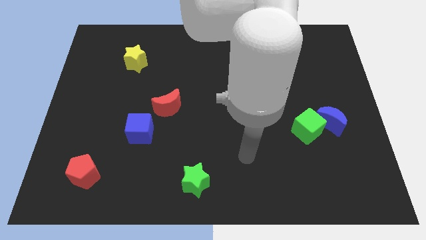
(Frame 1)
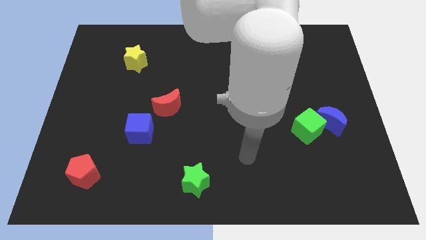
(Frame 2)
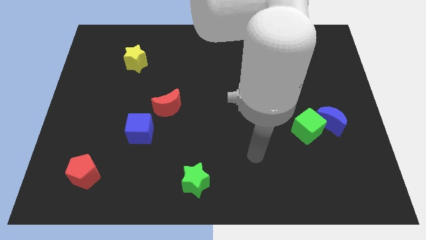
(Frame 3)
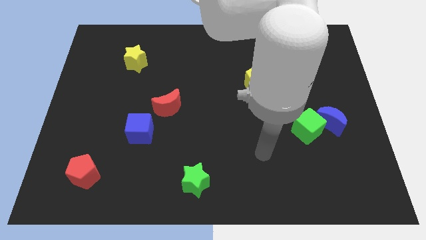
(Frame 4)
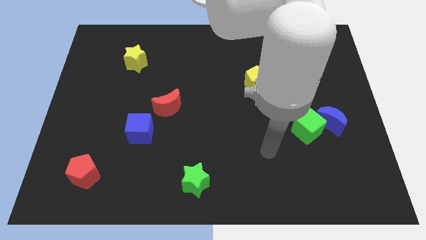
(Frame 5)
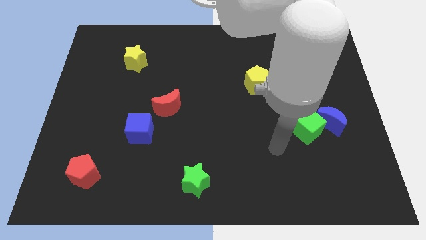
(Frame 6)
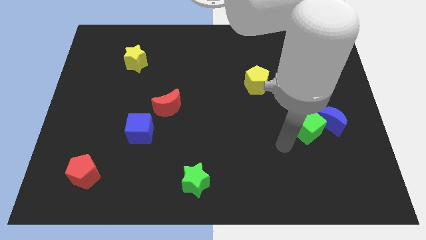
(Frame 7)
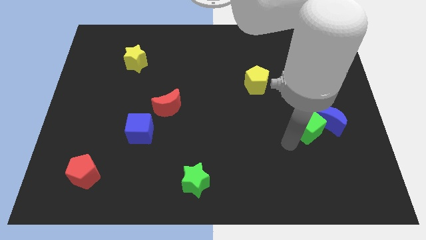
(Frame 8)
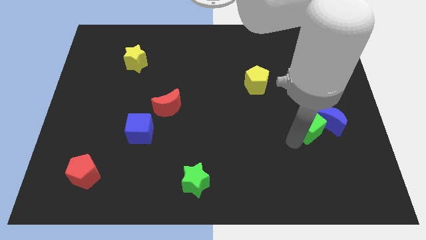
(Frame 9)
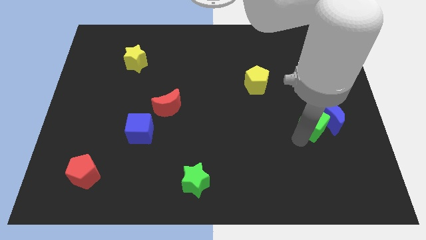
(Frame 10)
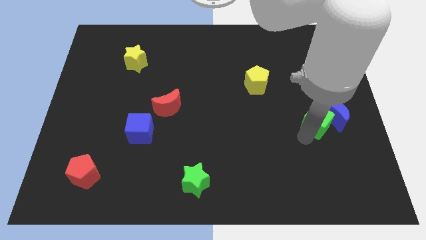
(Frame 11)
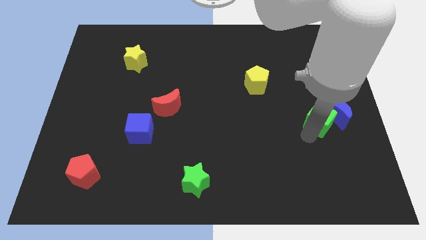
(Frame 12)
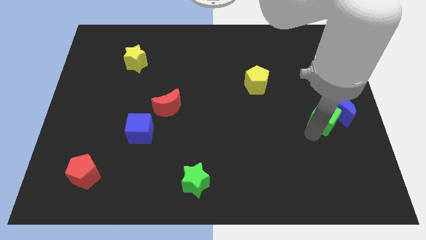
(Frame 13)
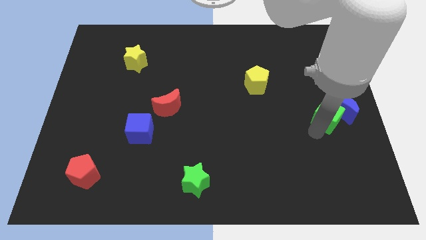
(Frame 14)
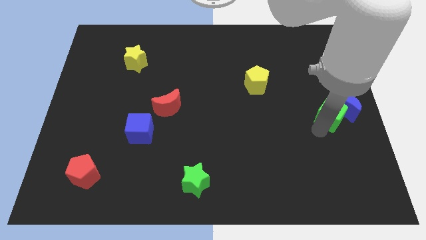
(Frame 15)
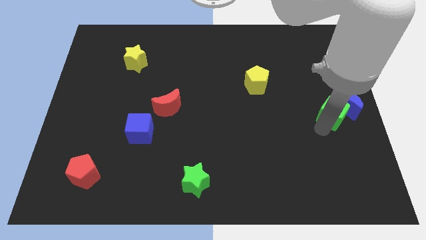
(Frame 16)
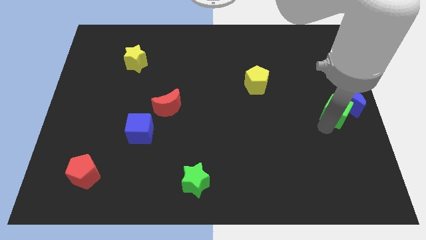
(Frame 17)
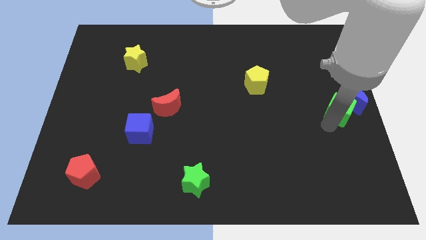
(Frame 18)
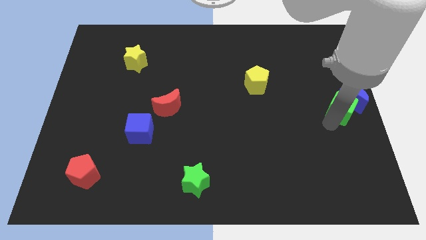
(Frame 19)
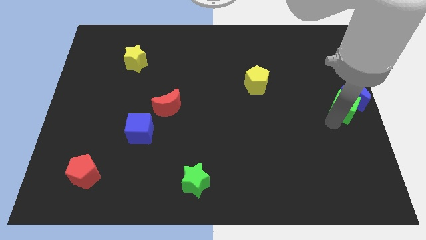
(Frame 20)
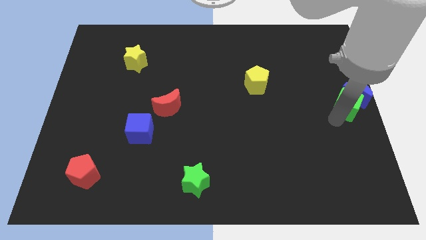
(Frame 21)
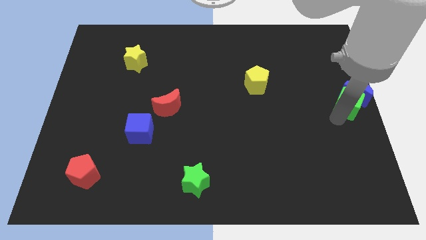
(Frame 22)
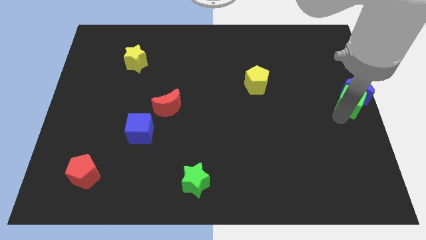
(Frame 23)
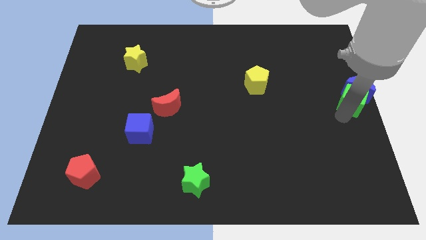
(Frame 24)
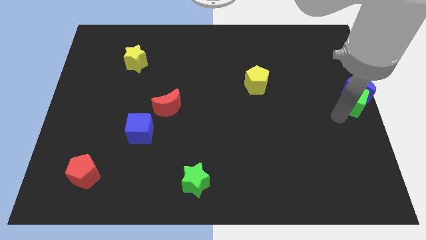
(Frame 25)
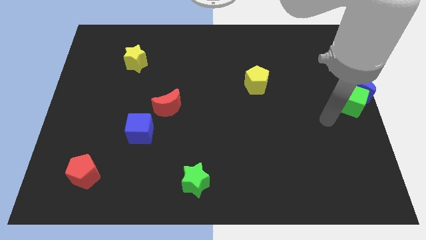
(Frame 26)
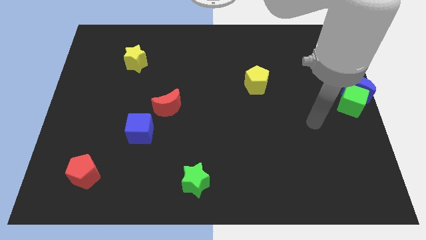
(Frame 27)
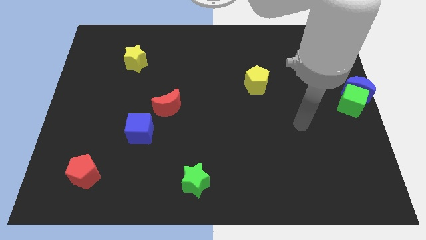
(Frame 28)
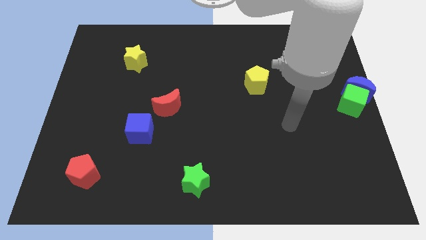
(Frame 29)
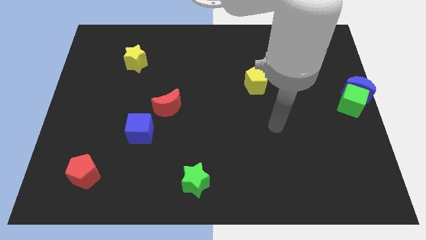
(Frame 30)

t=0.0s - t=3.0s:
move the green cube and blue crescent to center right side

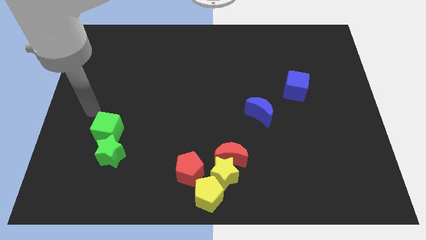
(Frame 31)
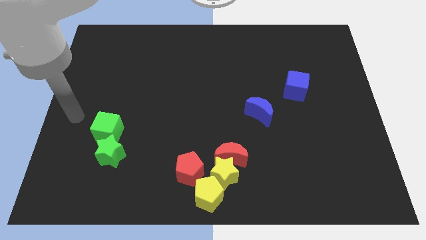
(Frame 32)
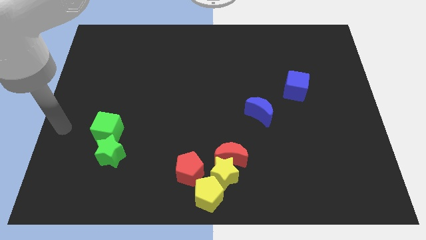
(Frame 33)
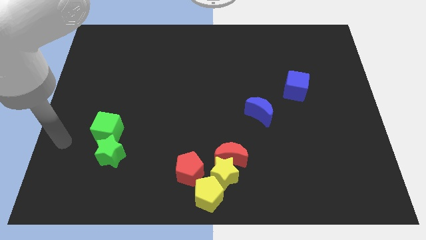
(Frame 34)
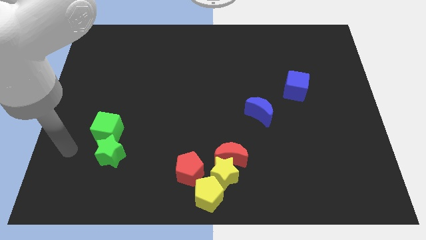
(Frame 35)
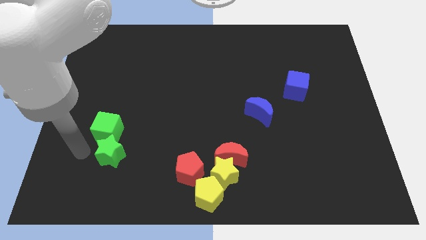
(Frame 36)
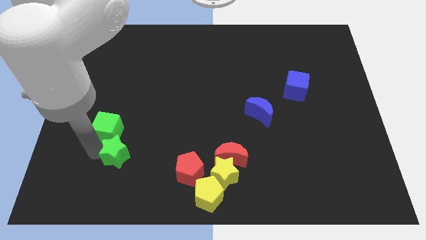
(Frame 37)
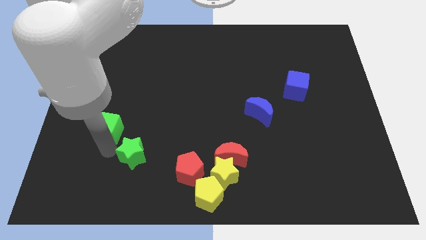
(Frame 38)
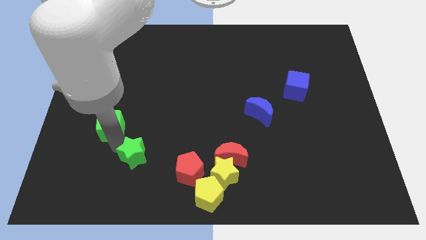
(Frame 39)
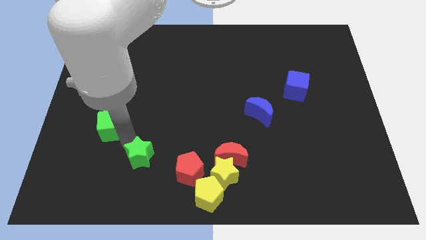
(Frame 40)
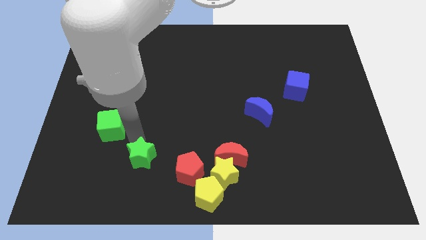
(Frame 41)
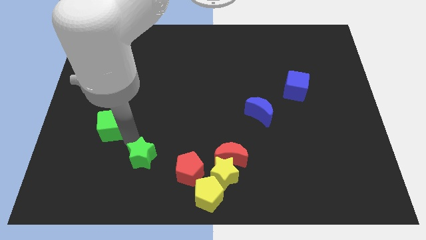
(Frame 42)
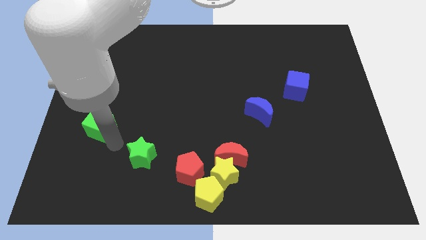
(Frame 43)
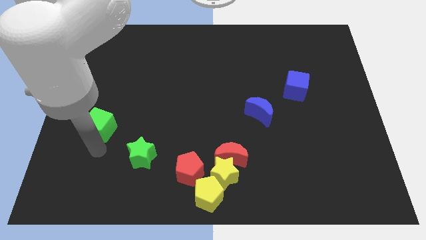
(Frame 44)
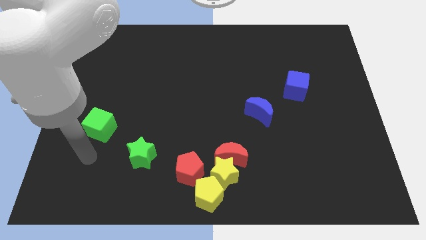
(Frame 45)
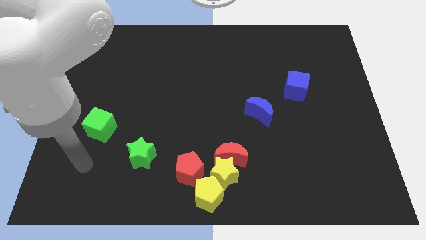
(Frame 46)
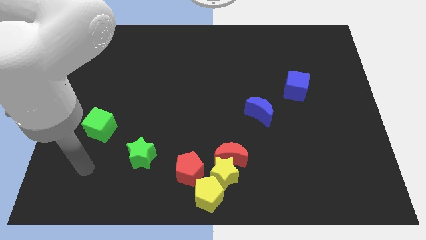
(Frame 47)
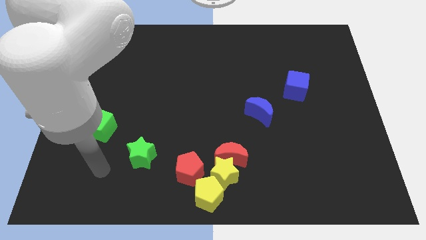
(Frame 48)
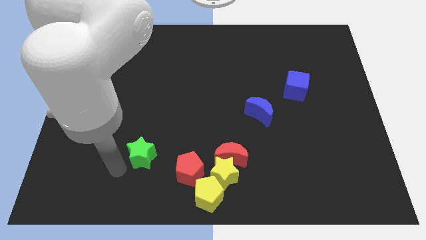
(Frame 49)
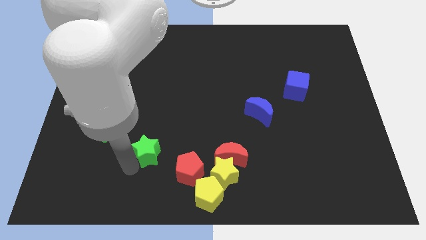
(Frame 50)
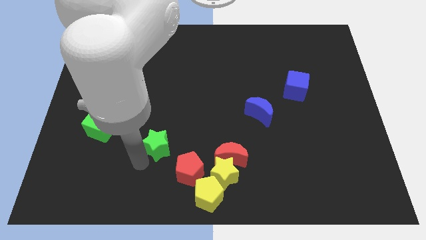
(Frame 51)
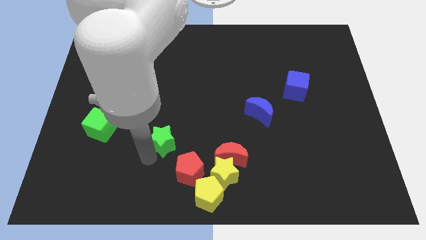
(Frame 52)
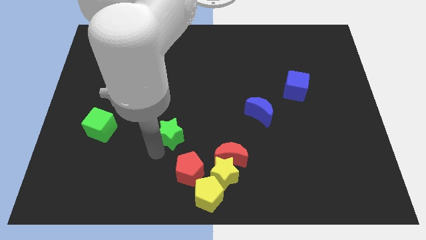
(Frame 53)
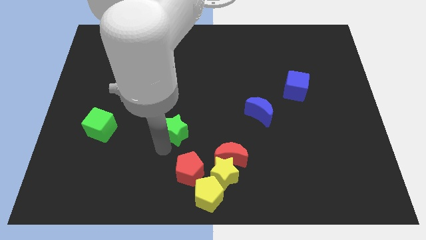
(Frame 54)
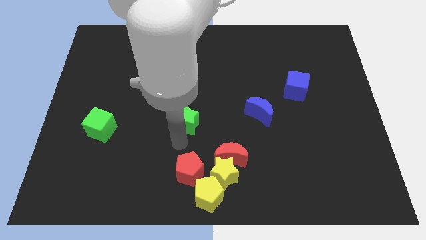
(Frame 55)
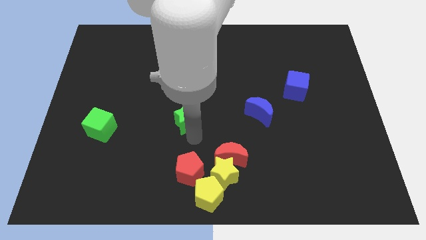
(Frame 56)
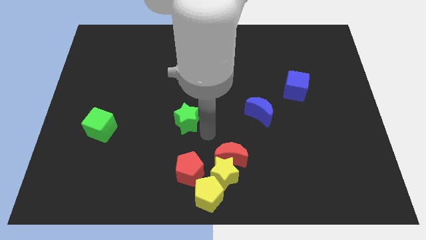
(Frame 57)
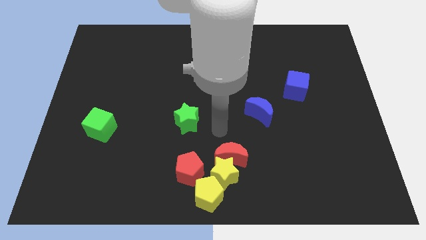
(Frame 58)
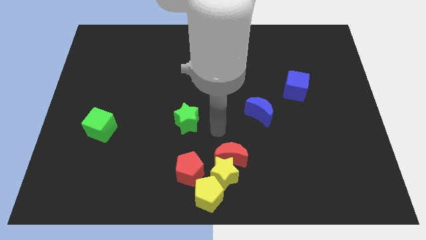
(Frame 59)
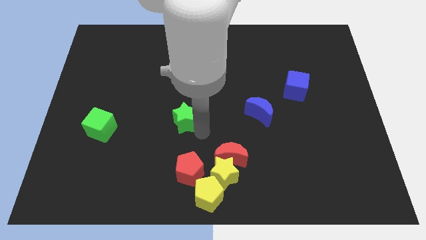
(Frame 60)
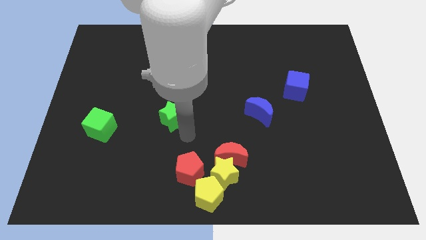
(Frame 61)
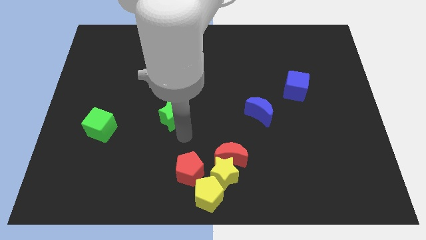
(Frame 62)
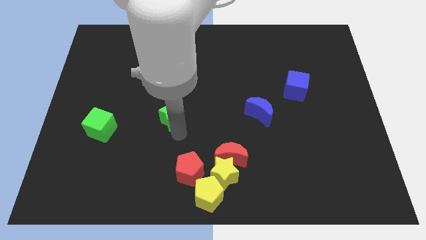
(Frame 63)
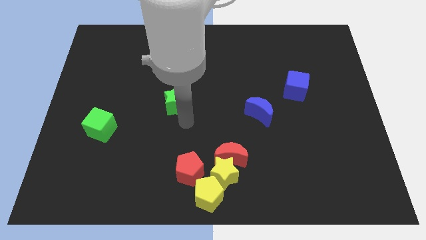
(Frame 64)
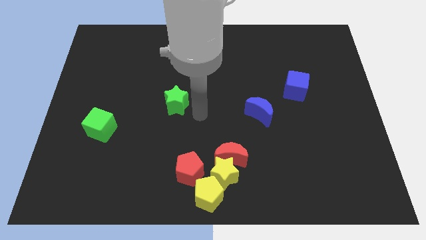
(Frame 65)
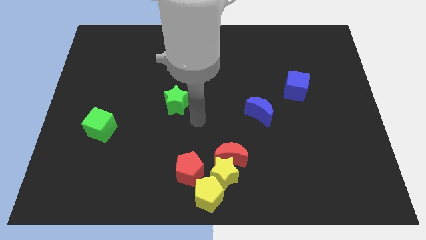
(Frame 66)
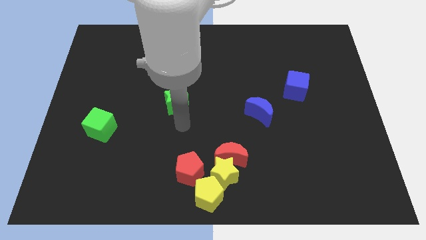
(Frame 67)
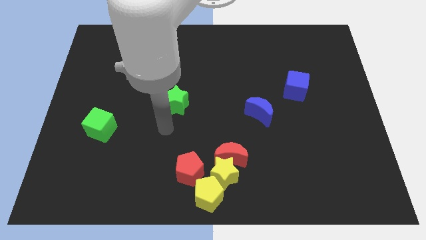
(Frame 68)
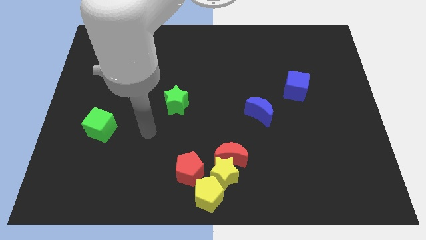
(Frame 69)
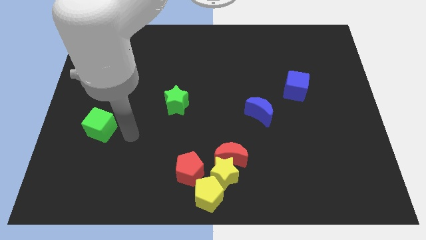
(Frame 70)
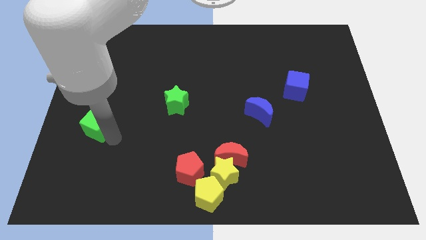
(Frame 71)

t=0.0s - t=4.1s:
place the green star to the left of blue moon

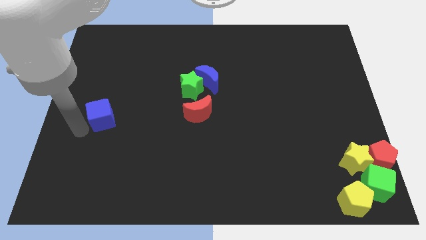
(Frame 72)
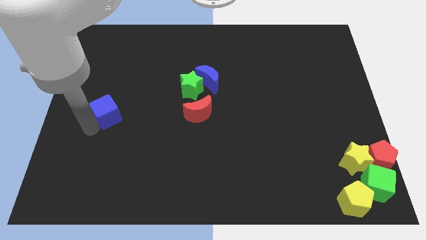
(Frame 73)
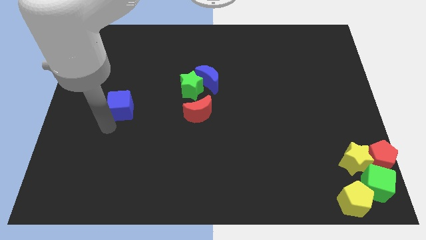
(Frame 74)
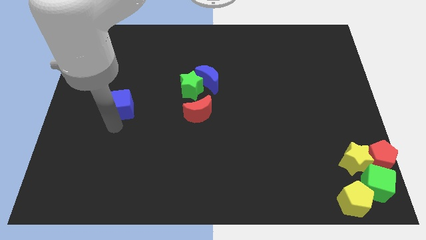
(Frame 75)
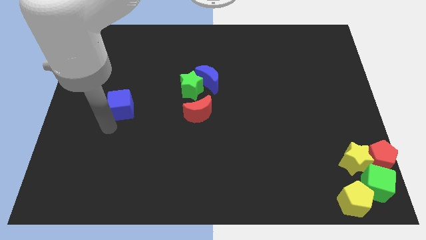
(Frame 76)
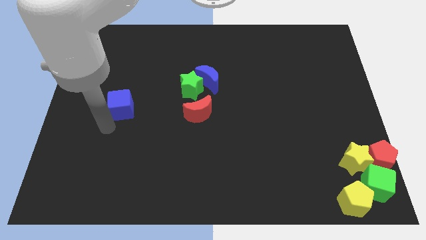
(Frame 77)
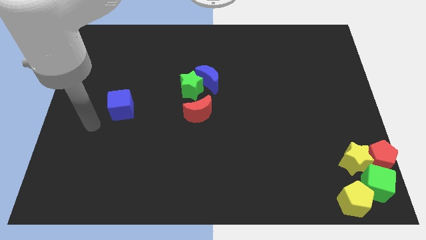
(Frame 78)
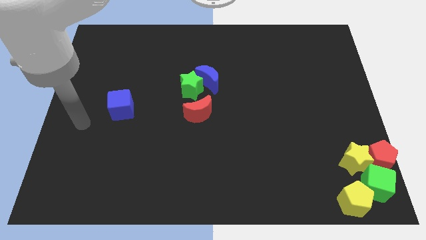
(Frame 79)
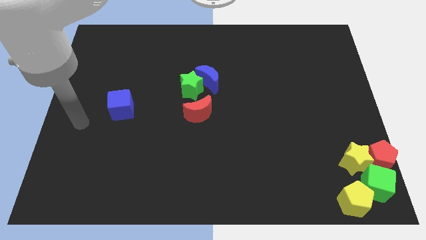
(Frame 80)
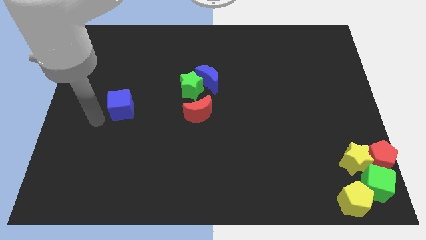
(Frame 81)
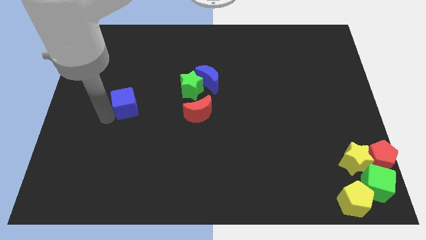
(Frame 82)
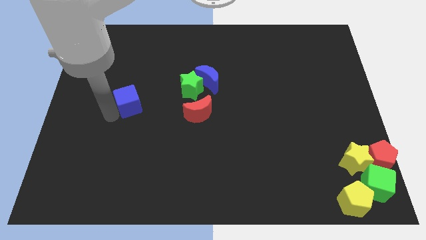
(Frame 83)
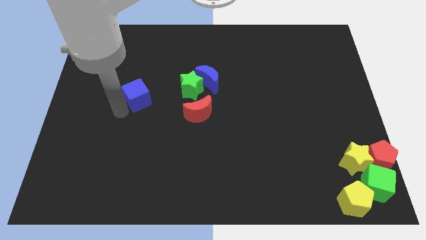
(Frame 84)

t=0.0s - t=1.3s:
push the blue cube towards the green star

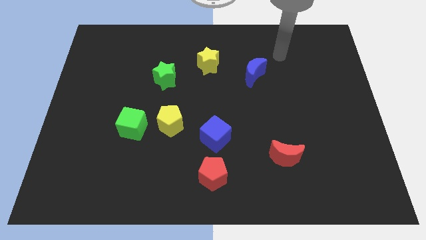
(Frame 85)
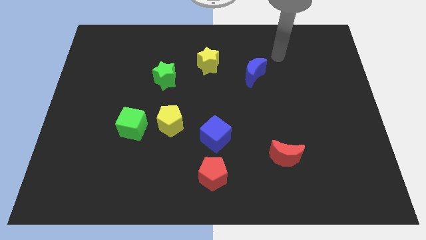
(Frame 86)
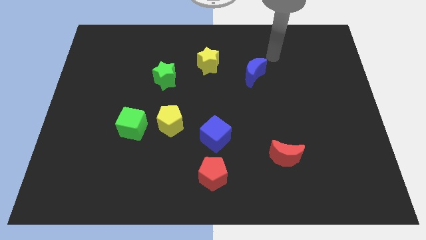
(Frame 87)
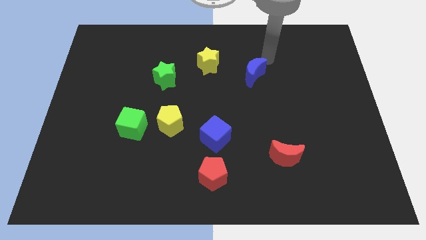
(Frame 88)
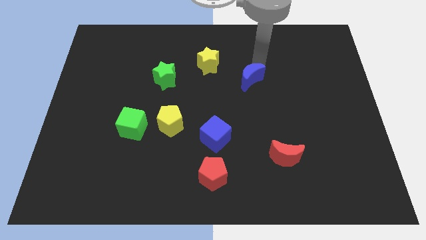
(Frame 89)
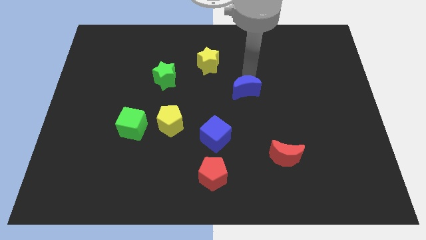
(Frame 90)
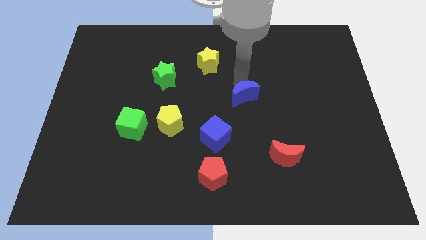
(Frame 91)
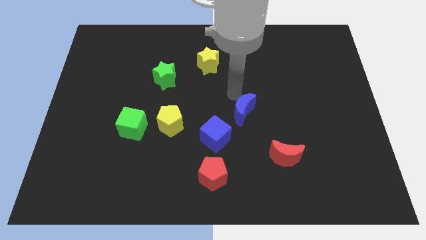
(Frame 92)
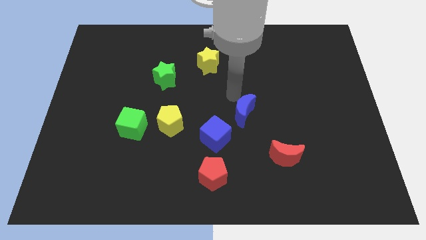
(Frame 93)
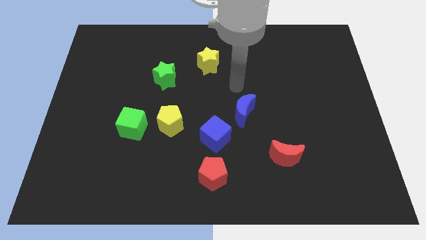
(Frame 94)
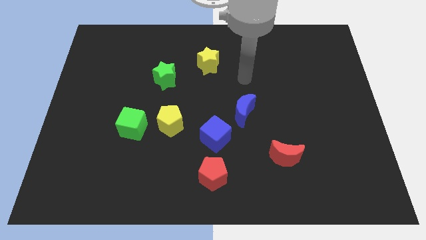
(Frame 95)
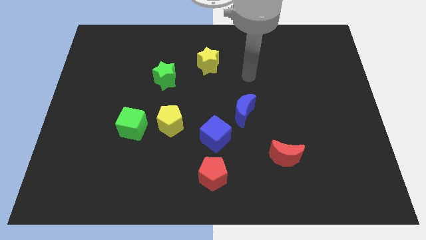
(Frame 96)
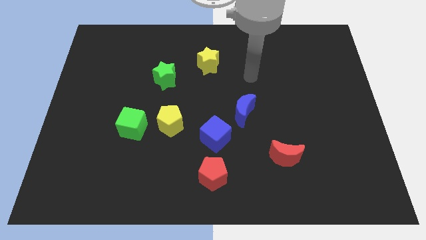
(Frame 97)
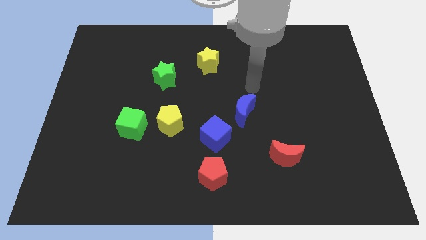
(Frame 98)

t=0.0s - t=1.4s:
push the blue moon towards the blue cube
